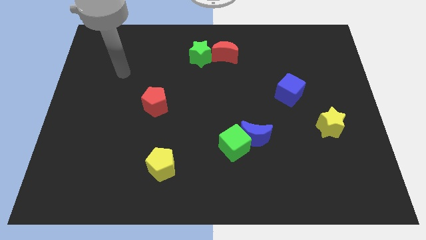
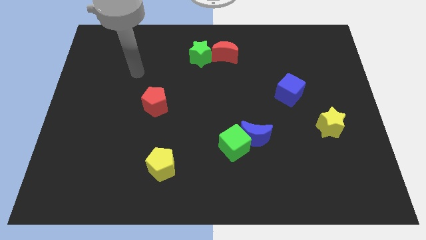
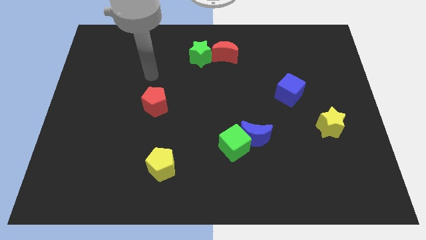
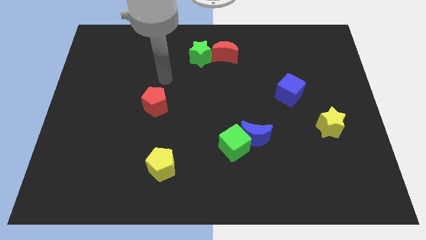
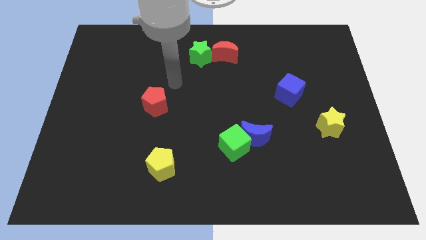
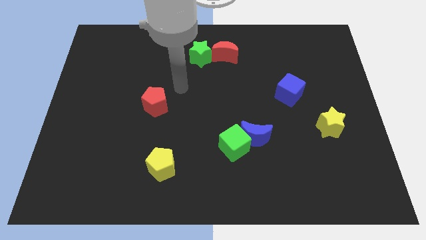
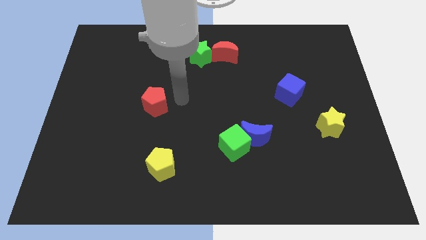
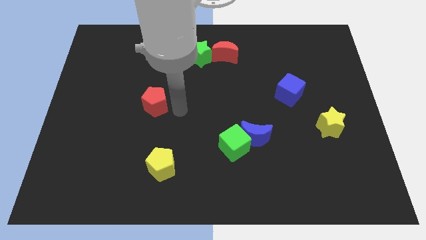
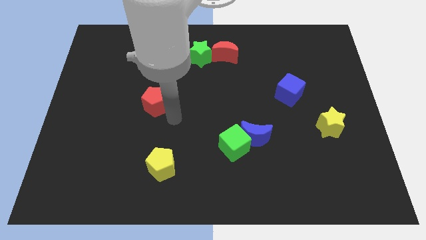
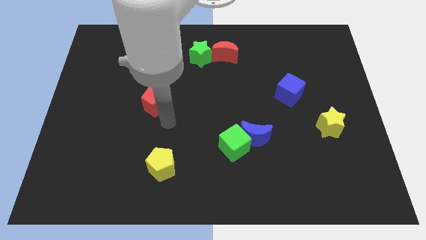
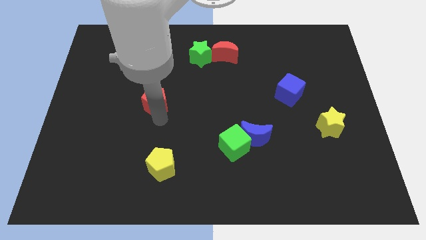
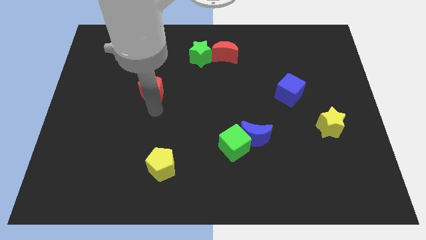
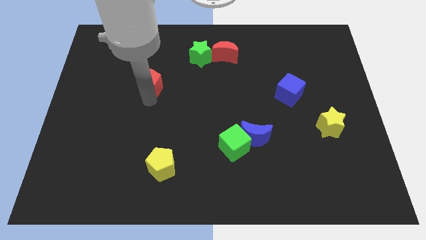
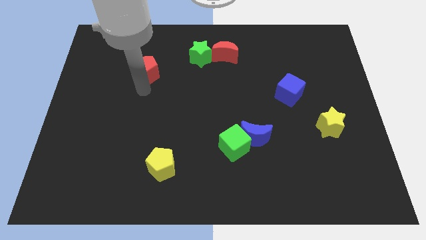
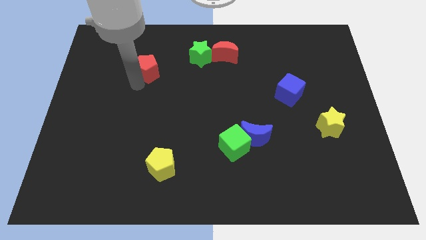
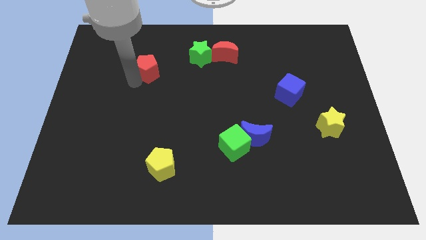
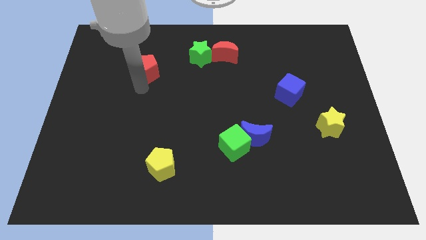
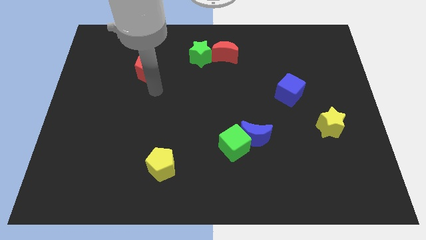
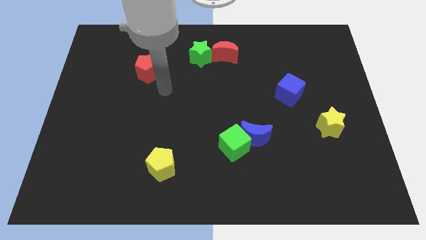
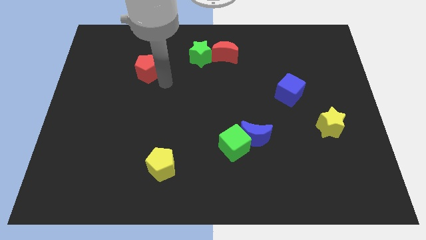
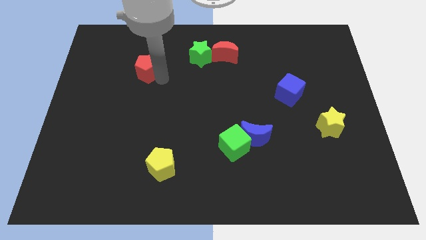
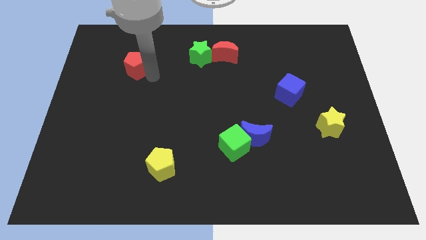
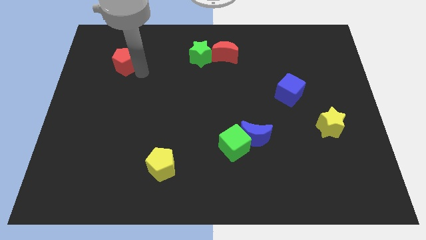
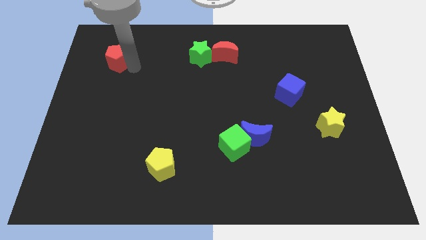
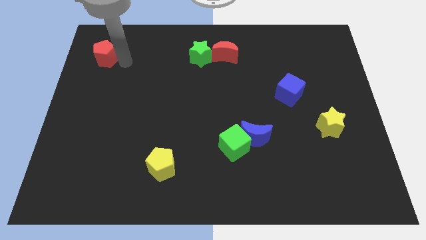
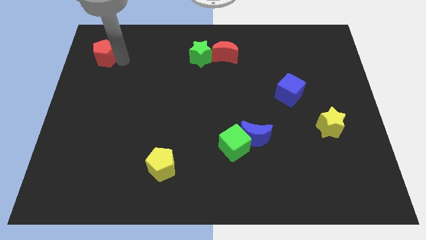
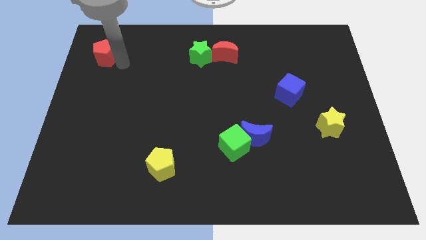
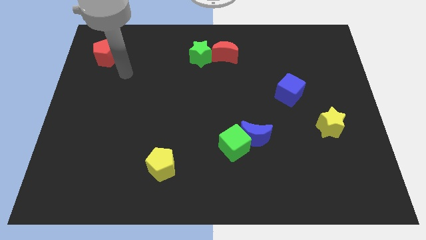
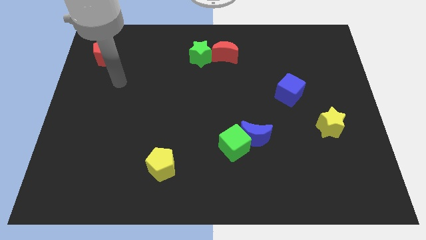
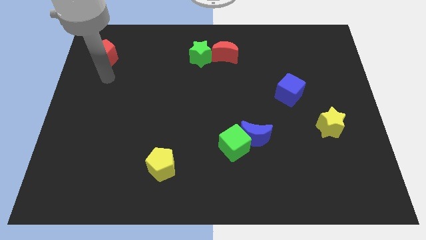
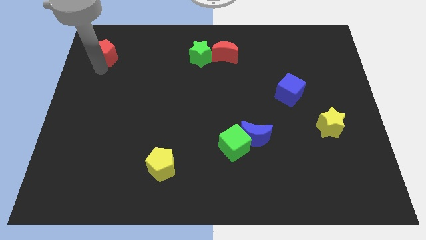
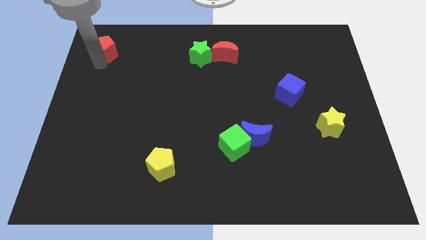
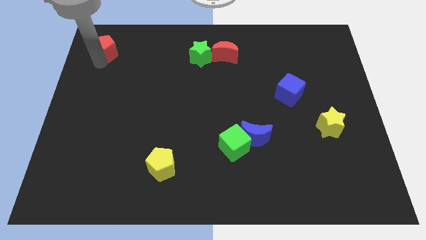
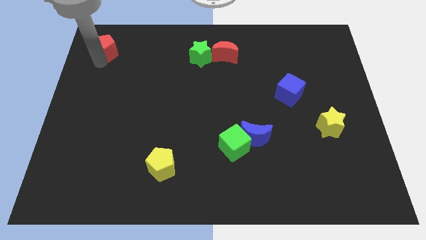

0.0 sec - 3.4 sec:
slide the red pentagon towards the top left of the board

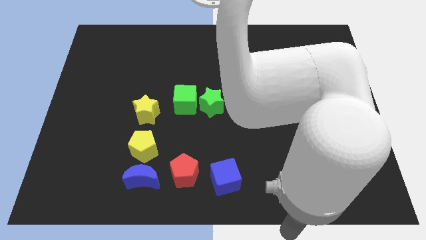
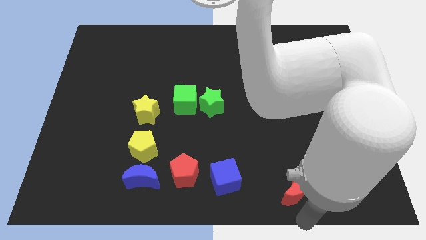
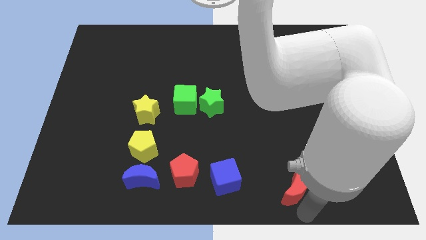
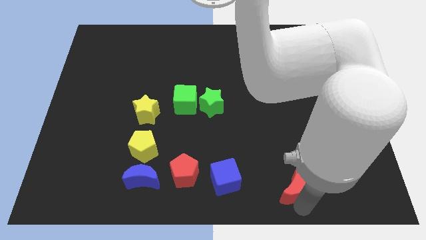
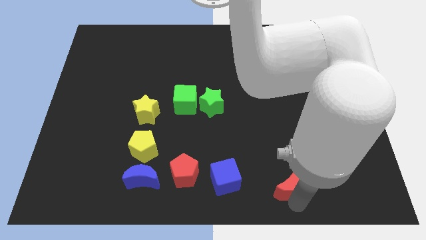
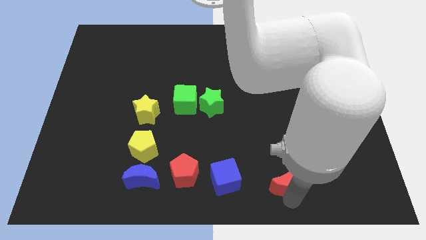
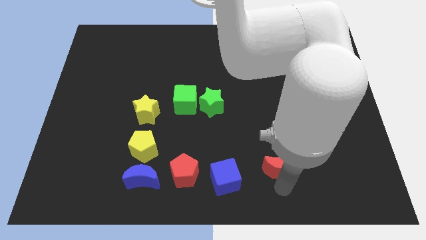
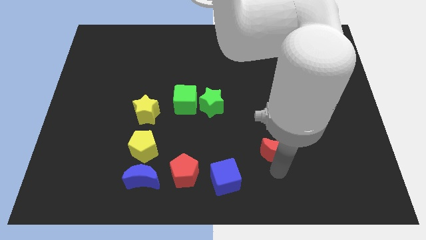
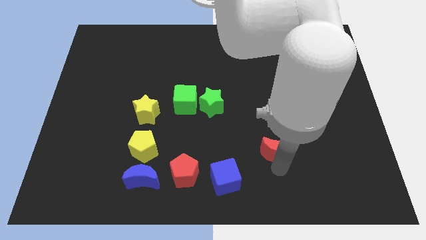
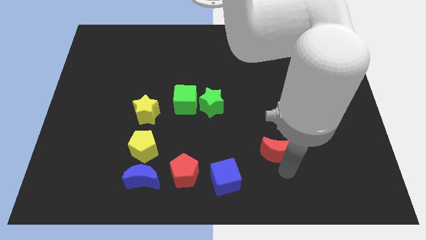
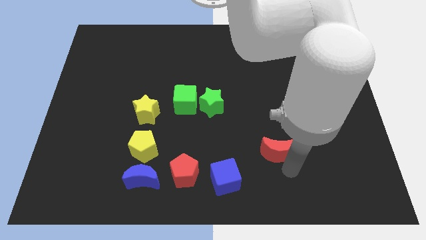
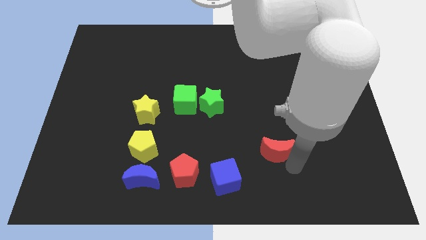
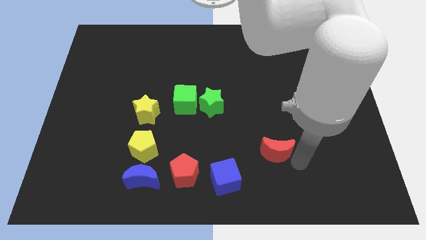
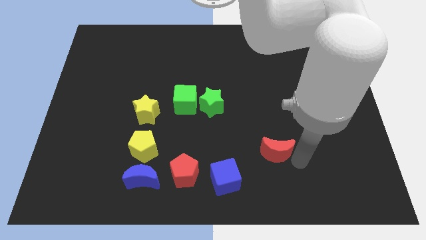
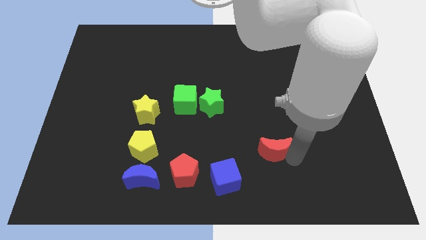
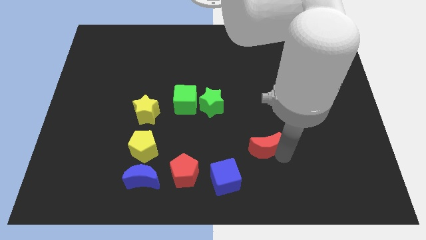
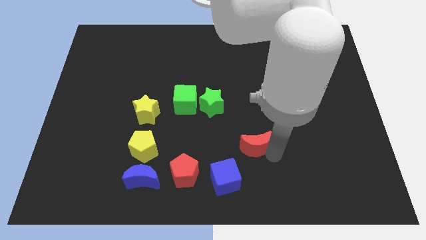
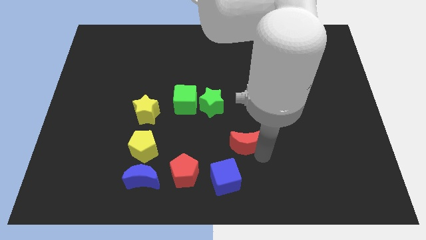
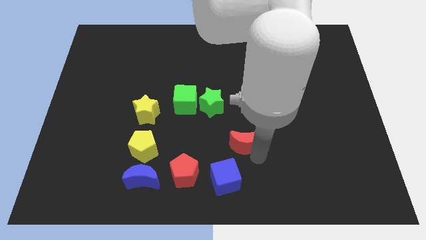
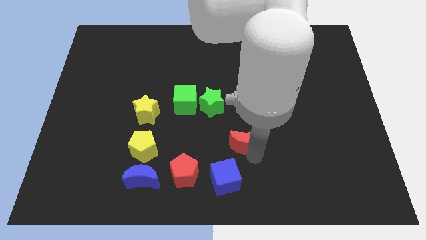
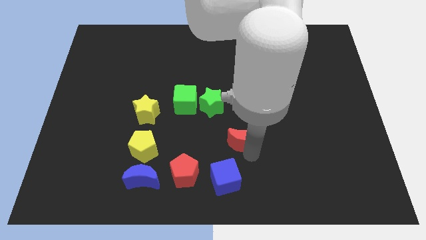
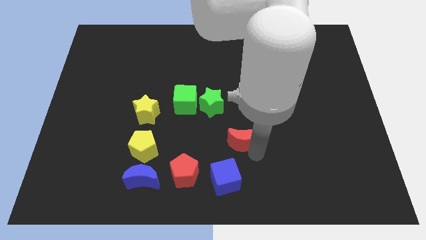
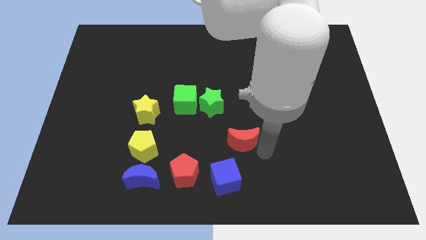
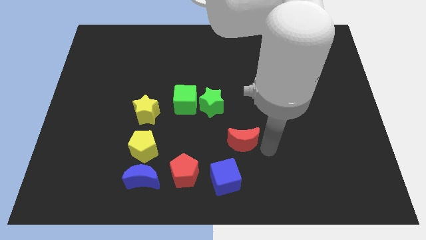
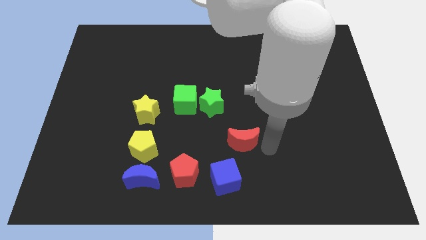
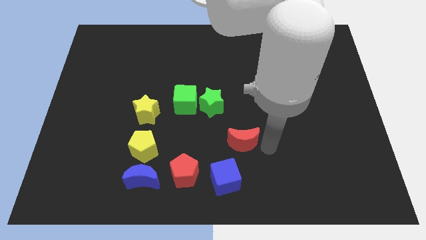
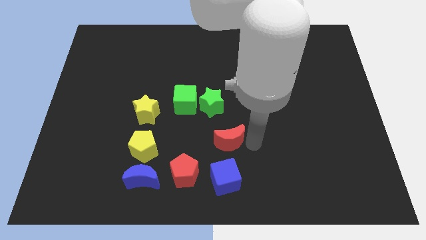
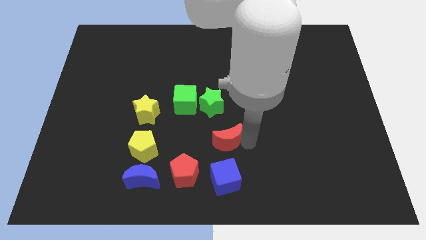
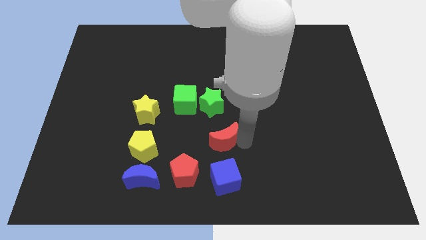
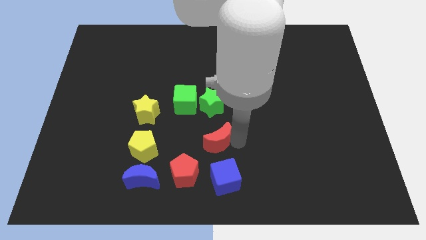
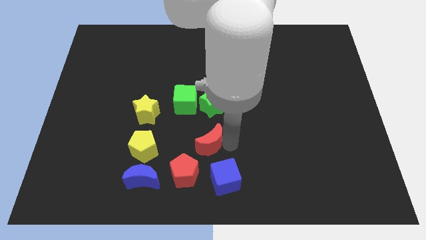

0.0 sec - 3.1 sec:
move the red crescent in between the blue cube and green star

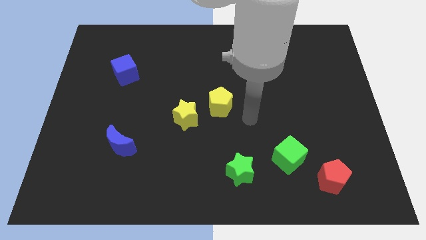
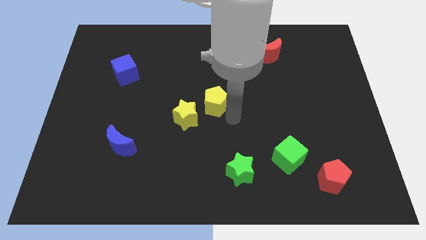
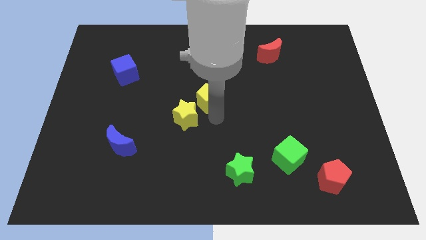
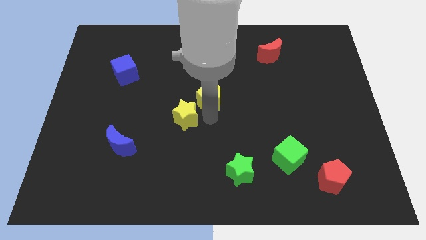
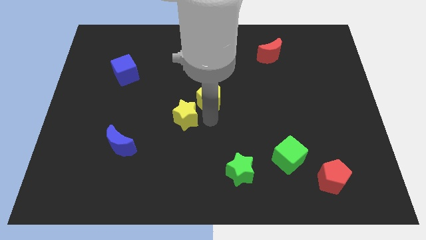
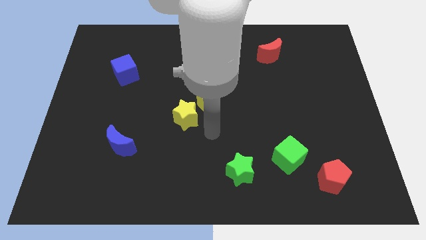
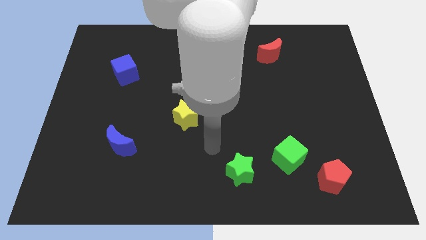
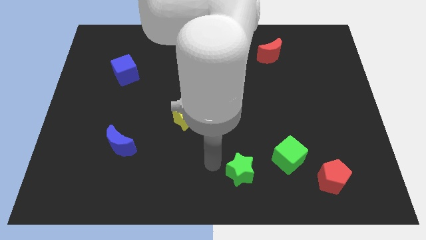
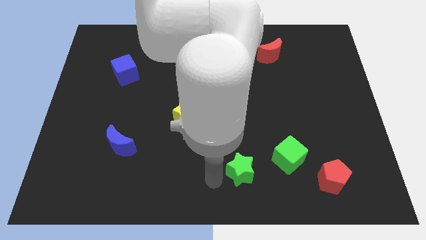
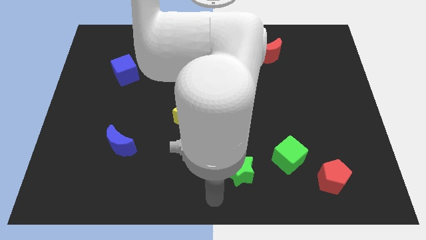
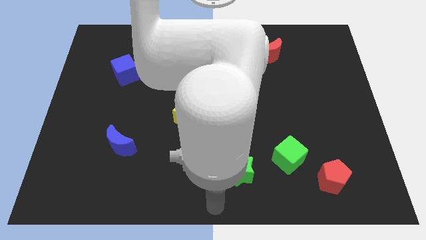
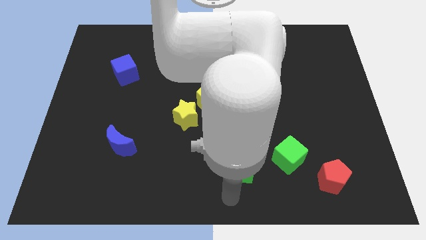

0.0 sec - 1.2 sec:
place your arm to the bottom side of the green star

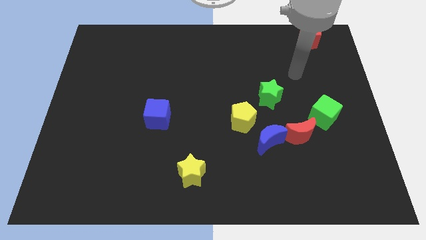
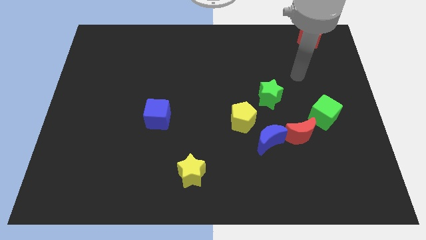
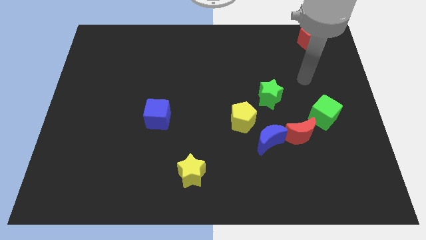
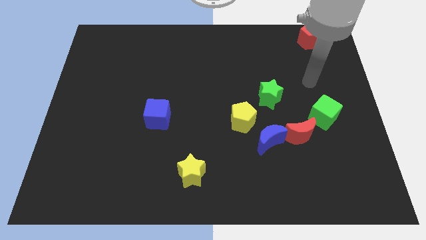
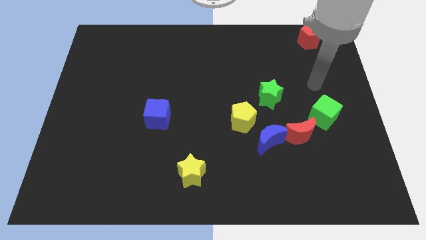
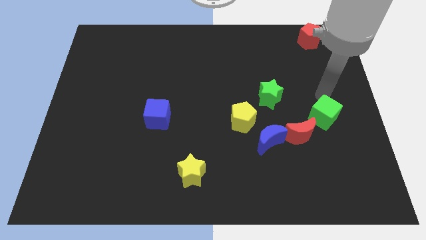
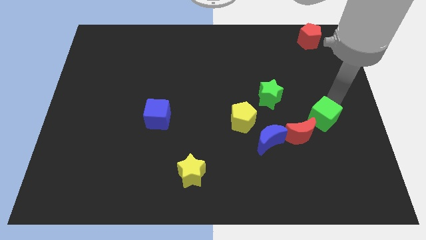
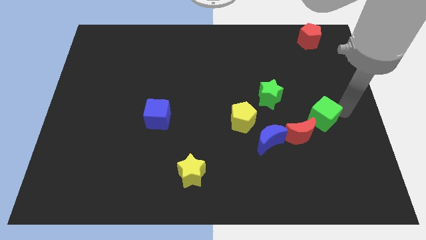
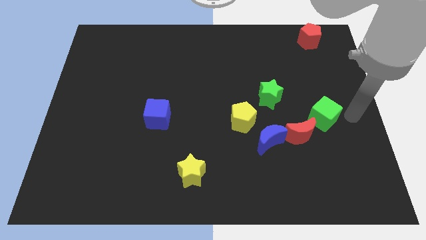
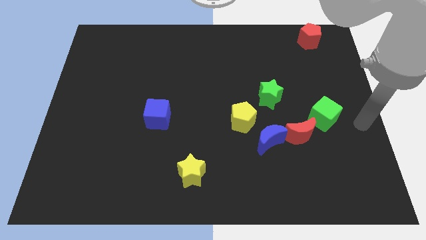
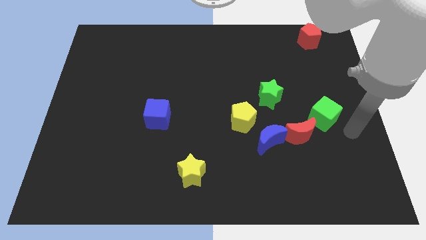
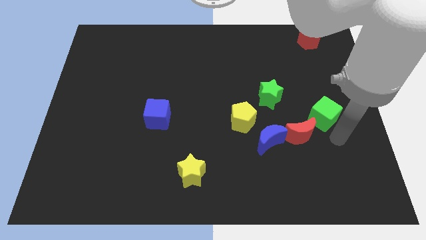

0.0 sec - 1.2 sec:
touch the top side of the green cube
